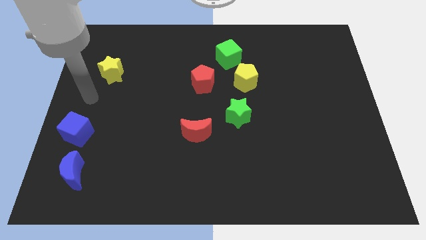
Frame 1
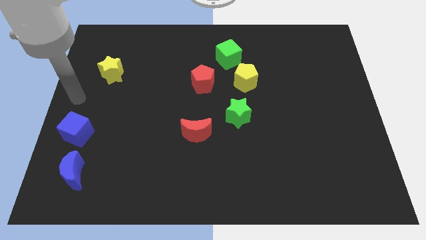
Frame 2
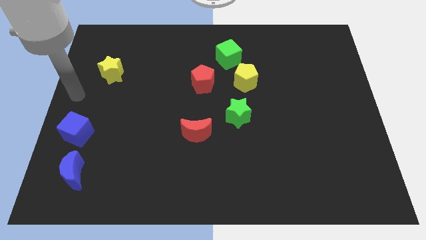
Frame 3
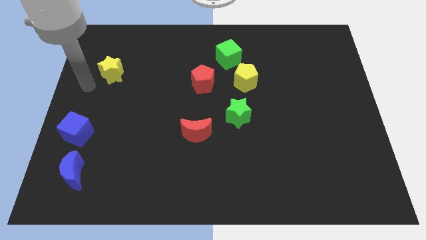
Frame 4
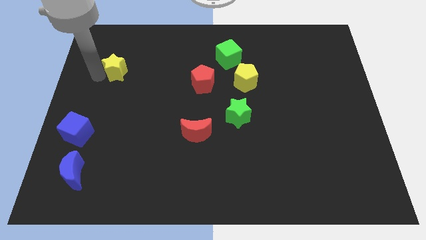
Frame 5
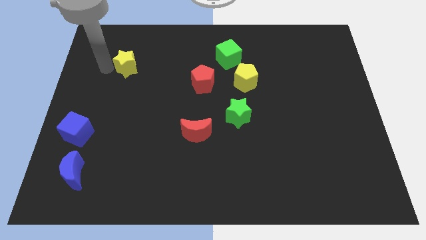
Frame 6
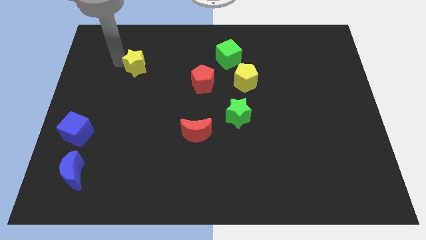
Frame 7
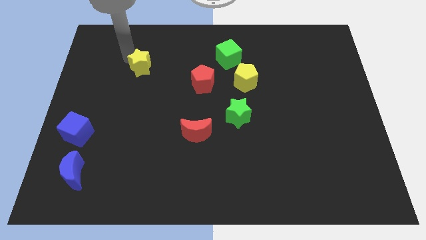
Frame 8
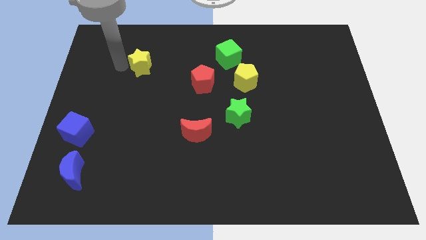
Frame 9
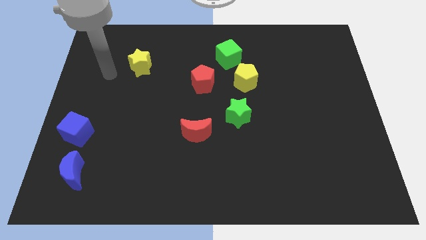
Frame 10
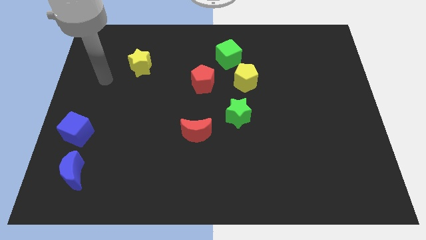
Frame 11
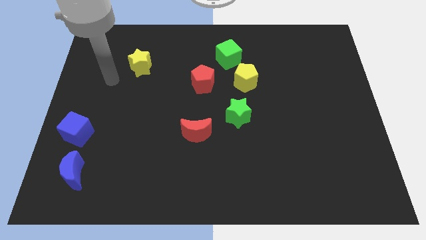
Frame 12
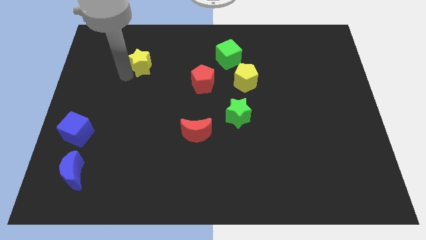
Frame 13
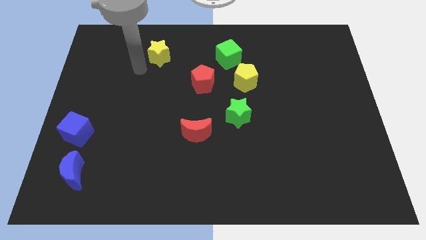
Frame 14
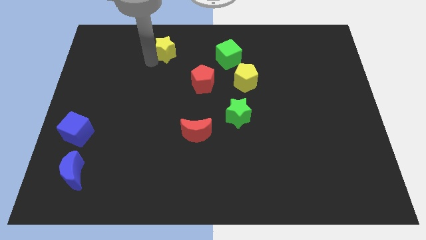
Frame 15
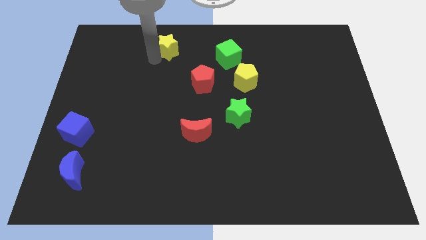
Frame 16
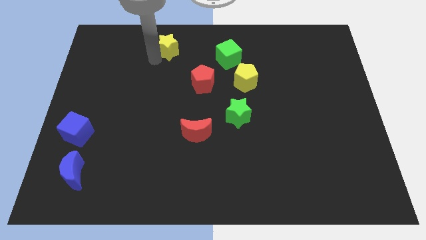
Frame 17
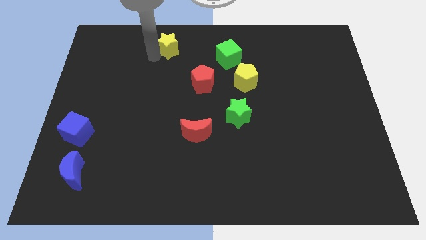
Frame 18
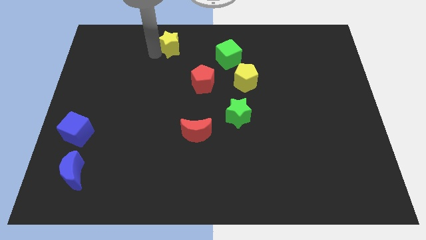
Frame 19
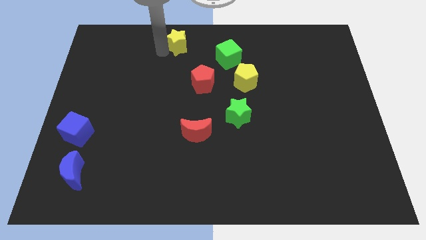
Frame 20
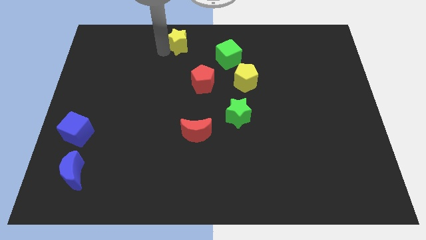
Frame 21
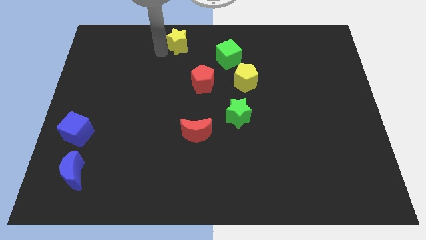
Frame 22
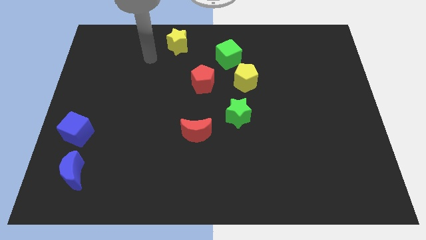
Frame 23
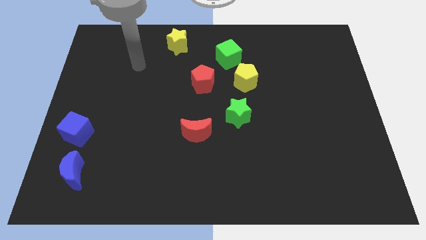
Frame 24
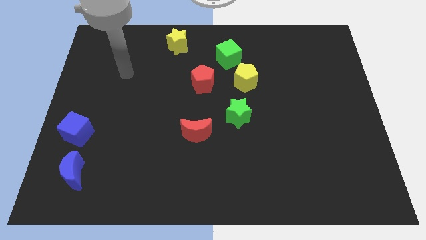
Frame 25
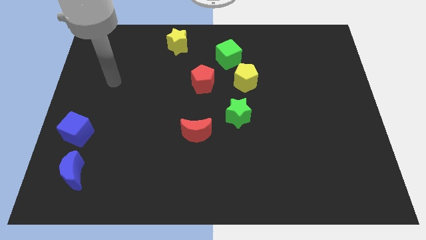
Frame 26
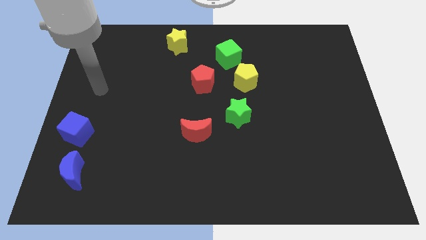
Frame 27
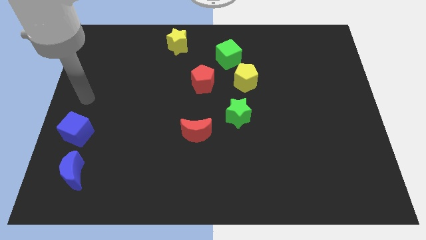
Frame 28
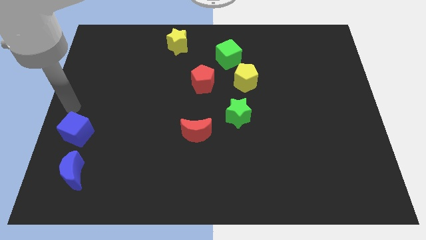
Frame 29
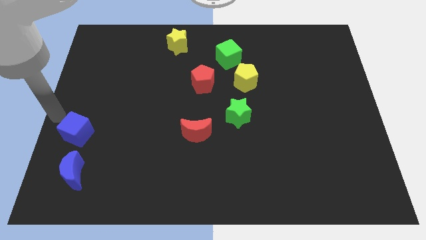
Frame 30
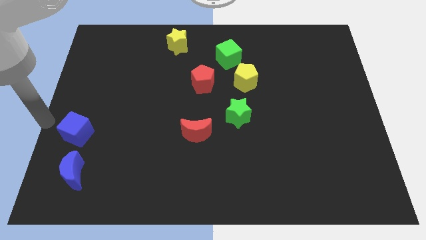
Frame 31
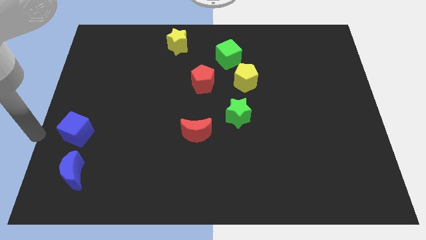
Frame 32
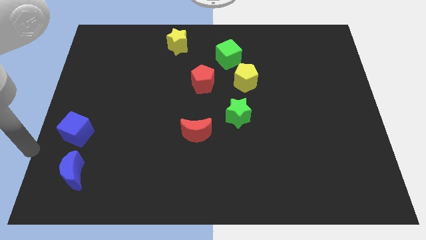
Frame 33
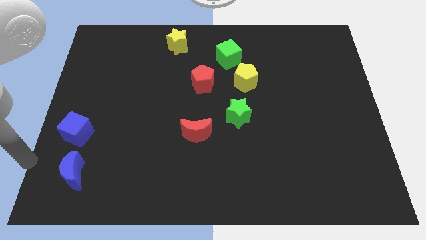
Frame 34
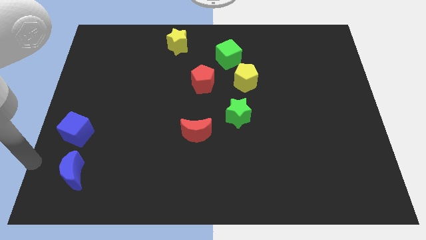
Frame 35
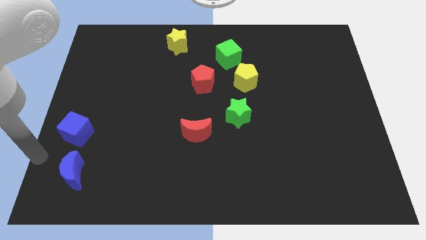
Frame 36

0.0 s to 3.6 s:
place the yellow star parallel to the top of the red pentagon

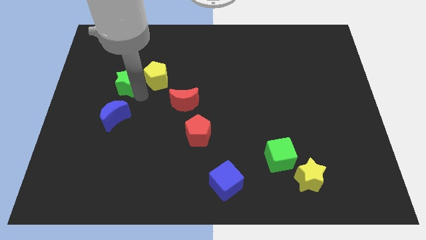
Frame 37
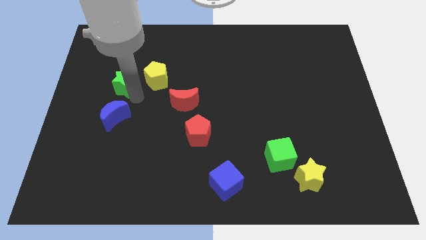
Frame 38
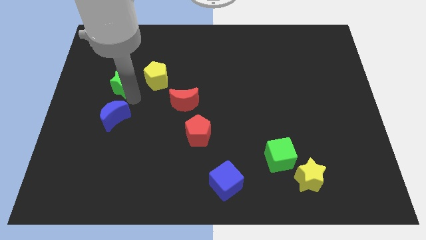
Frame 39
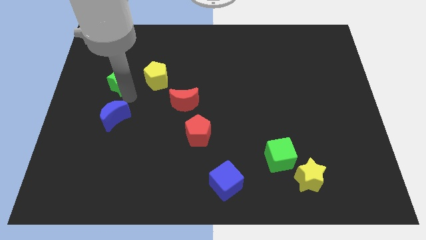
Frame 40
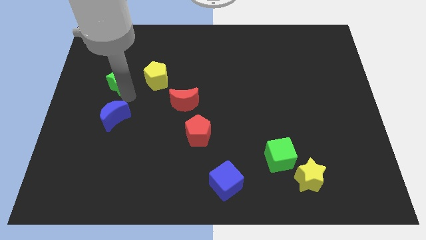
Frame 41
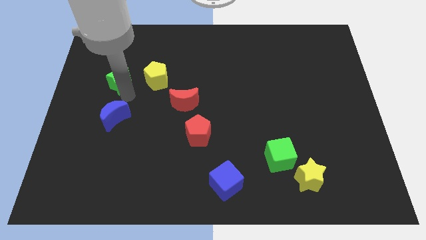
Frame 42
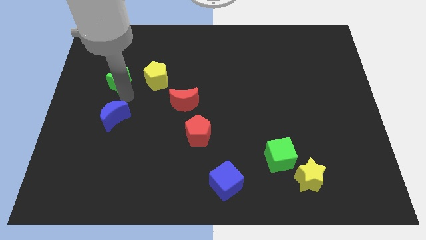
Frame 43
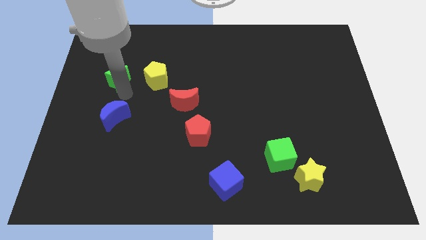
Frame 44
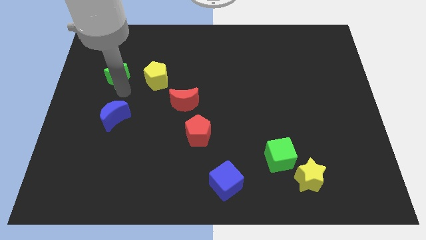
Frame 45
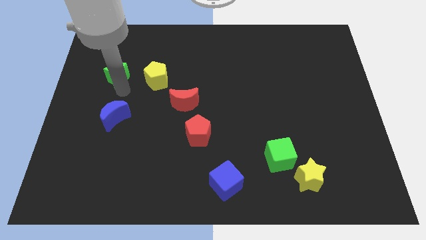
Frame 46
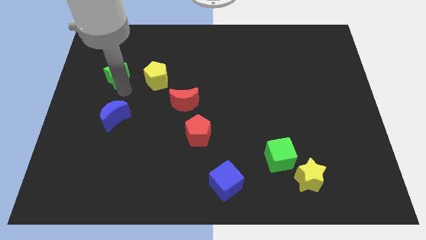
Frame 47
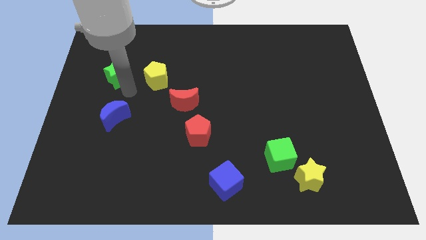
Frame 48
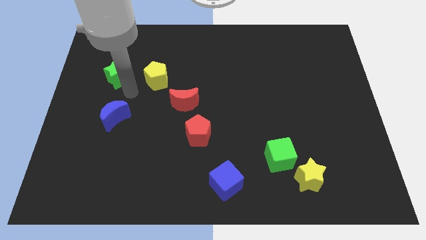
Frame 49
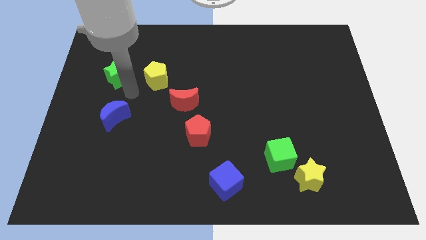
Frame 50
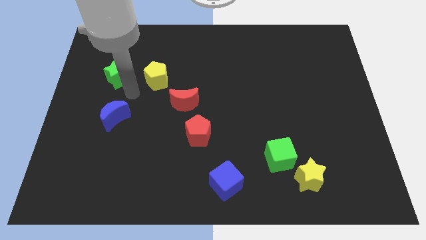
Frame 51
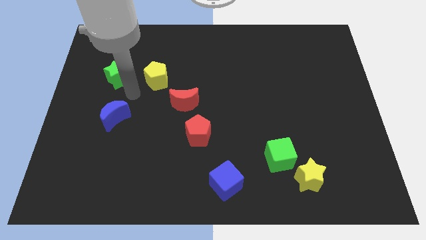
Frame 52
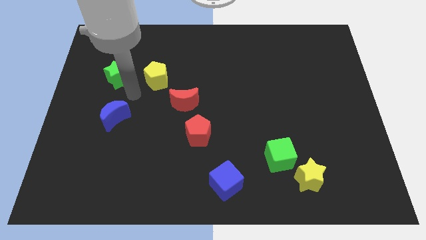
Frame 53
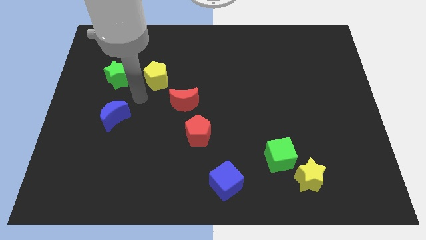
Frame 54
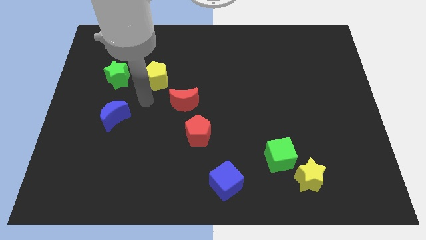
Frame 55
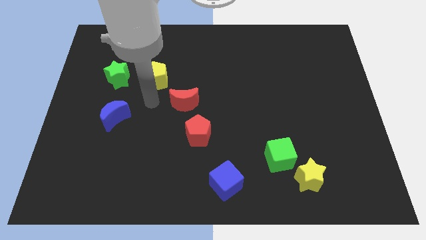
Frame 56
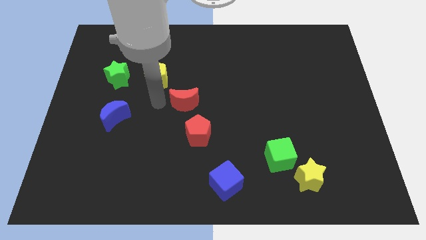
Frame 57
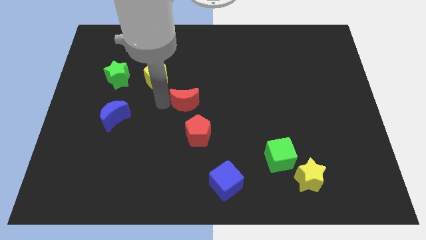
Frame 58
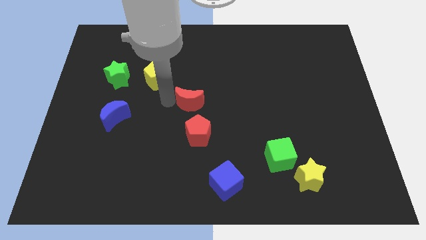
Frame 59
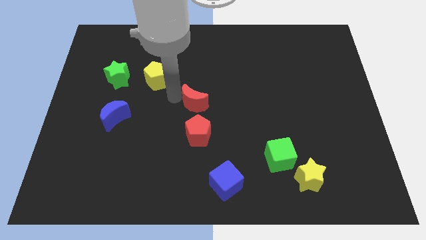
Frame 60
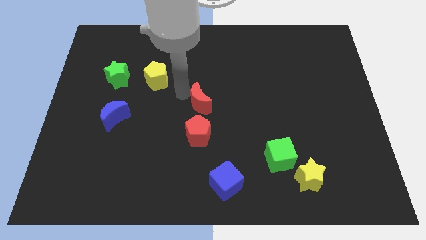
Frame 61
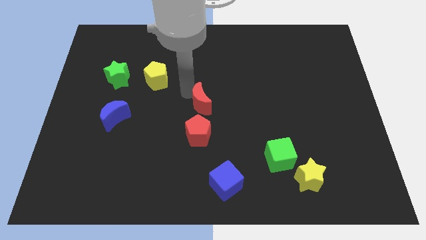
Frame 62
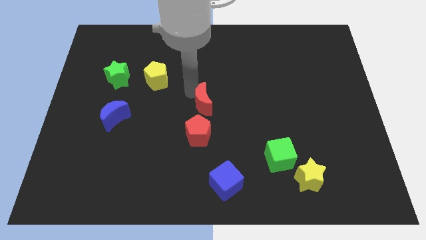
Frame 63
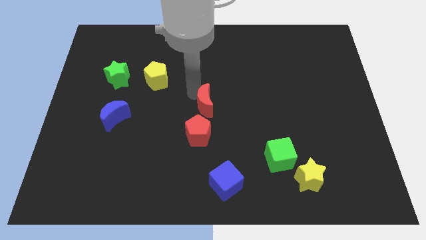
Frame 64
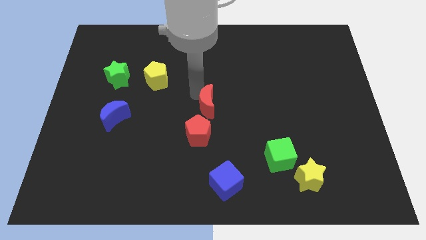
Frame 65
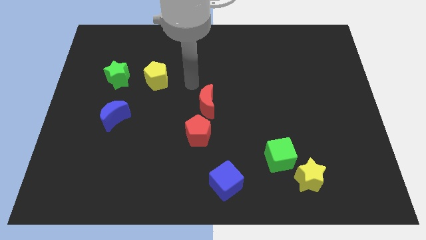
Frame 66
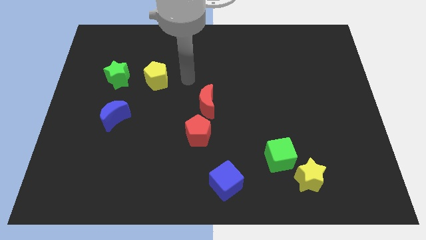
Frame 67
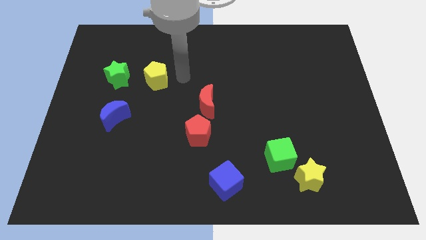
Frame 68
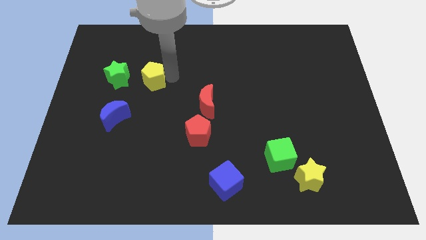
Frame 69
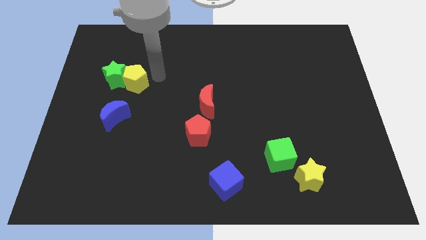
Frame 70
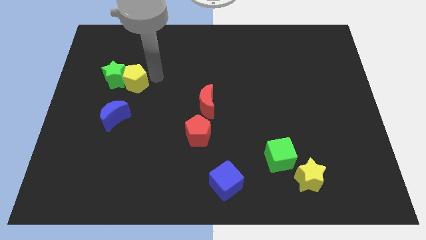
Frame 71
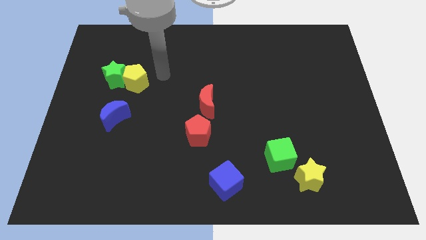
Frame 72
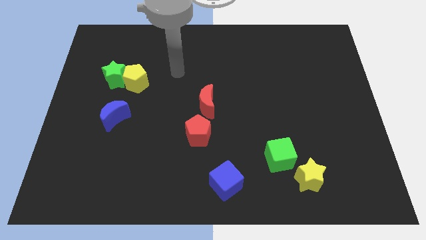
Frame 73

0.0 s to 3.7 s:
slide the green star and yellow pentagon diagonal to red crescent

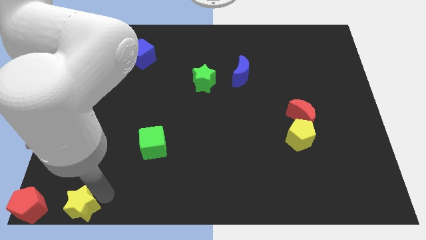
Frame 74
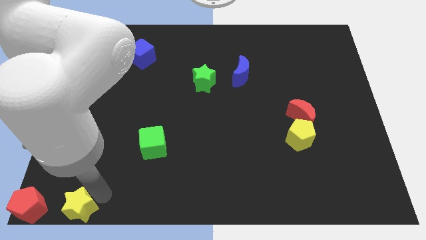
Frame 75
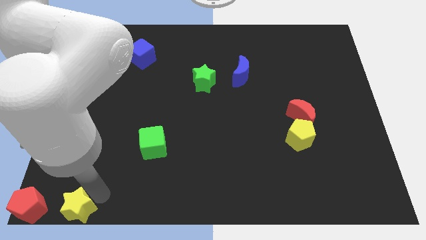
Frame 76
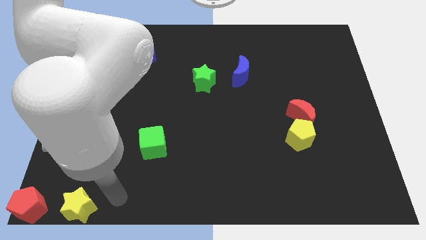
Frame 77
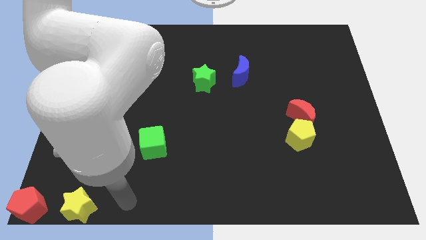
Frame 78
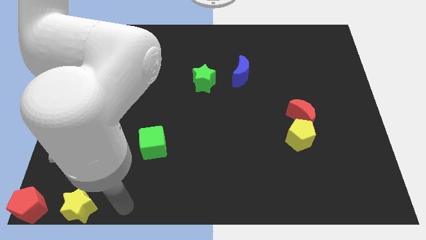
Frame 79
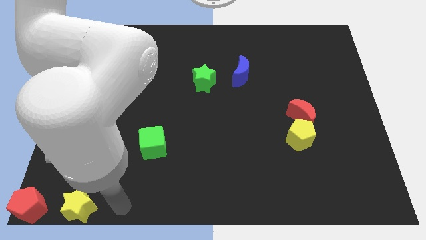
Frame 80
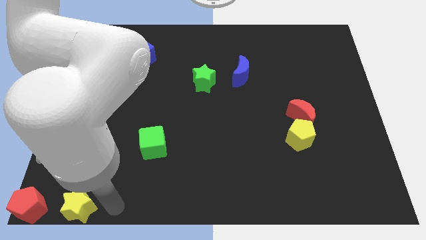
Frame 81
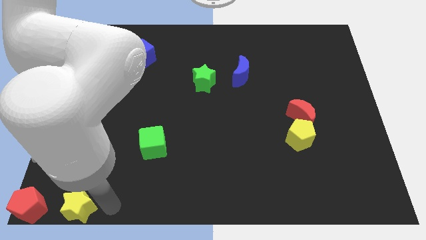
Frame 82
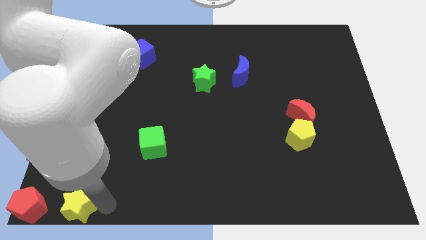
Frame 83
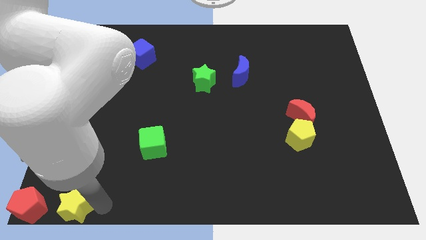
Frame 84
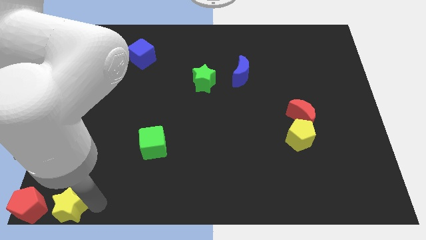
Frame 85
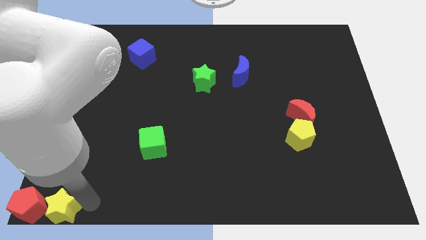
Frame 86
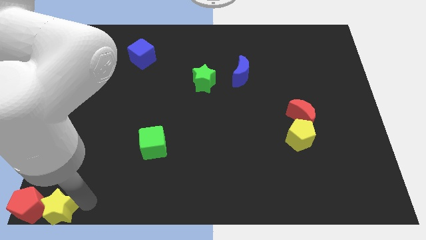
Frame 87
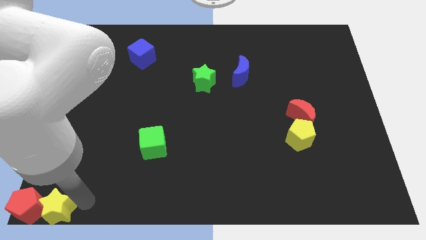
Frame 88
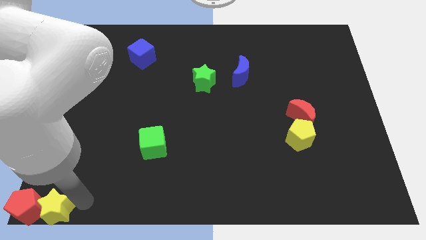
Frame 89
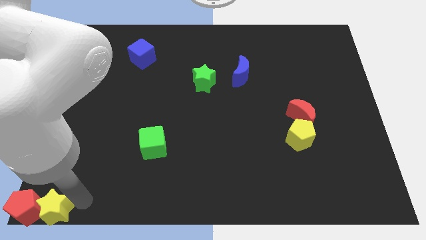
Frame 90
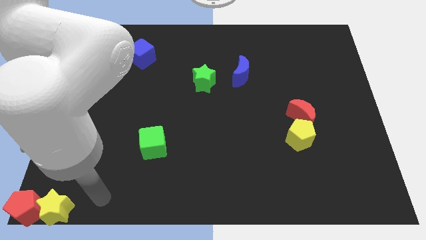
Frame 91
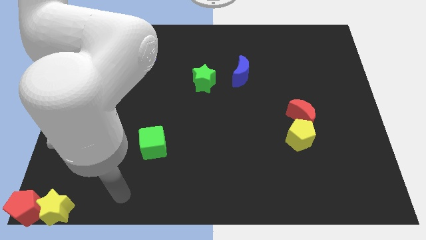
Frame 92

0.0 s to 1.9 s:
push the yellow star into red pentagon
